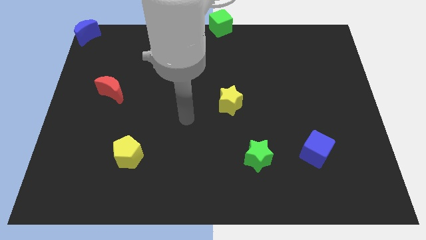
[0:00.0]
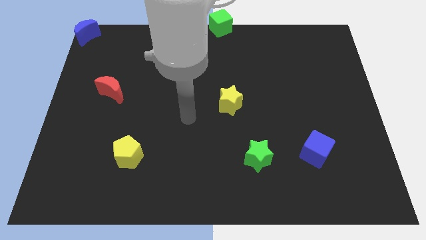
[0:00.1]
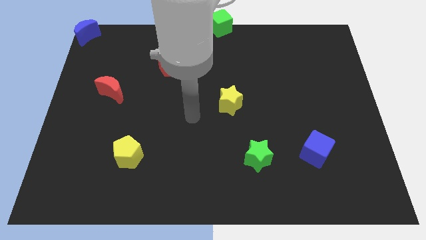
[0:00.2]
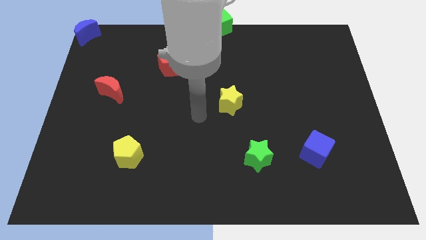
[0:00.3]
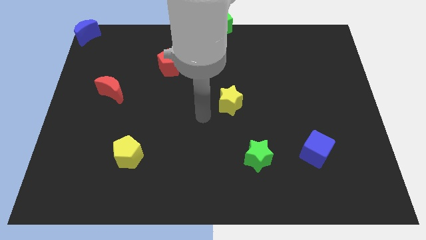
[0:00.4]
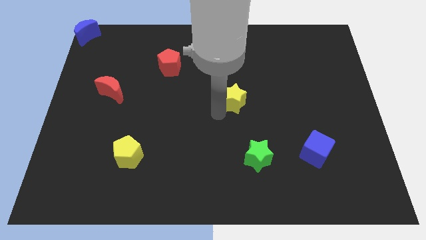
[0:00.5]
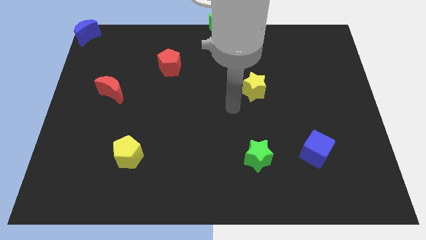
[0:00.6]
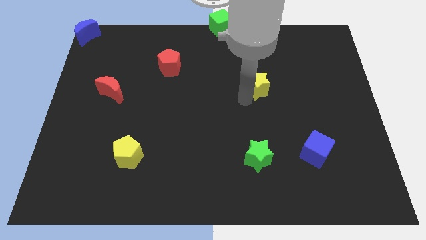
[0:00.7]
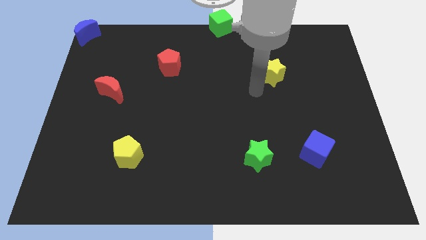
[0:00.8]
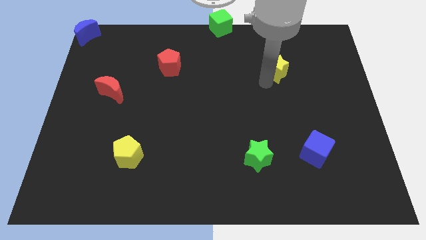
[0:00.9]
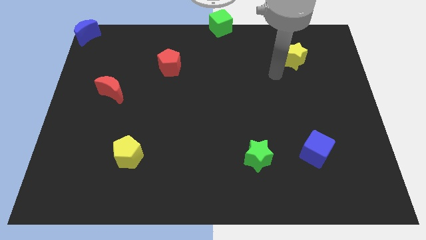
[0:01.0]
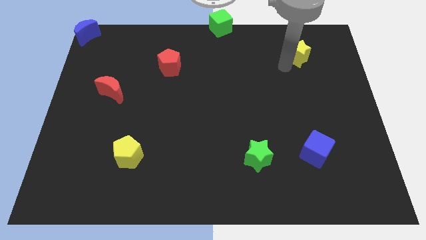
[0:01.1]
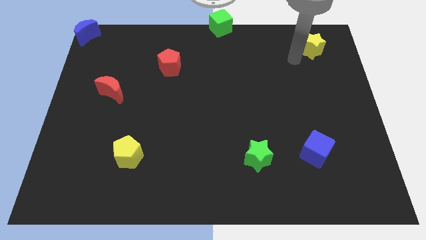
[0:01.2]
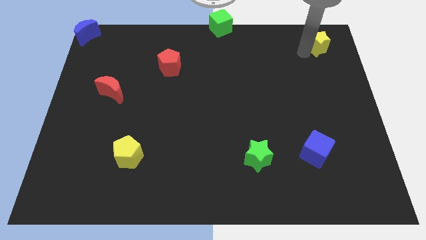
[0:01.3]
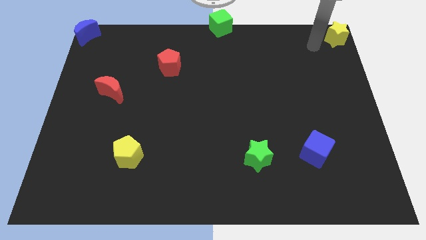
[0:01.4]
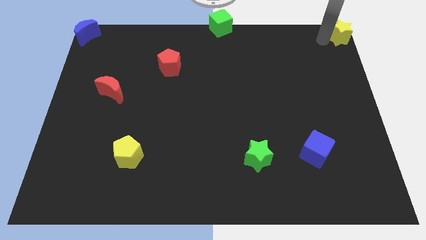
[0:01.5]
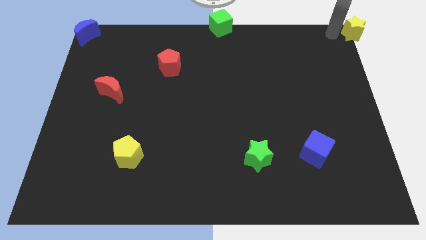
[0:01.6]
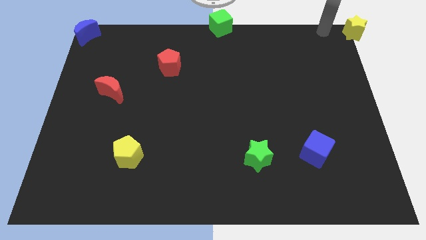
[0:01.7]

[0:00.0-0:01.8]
move the yellow star to the top right side of the table

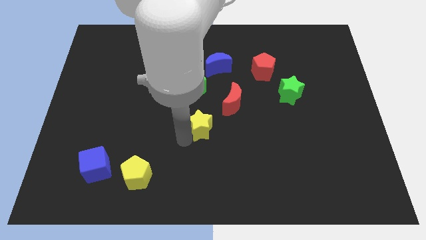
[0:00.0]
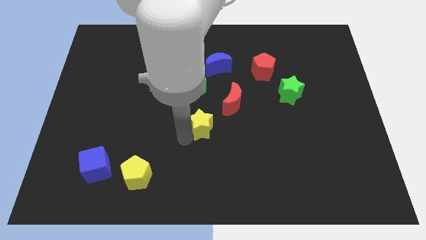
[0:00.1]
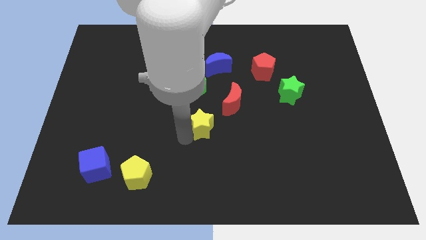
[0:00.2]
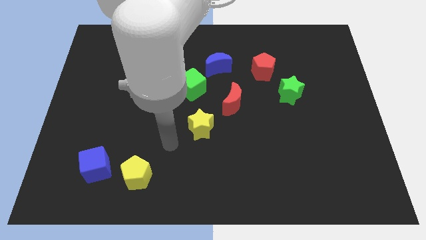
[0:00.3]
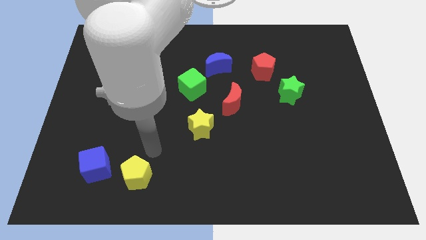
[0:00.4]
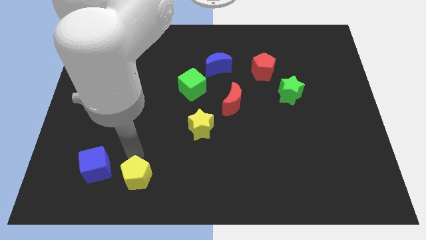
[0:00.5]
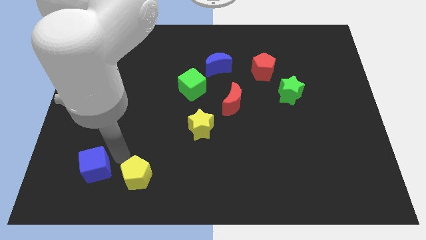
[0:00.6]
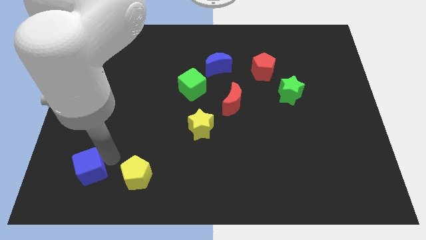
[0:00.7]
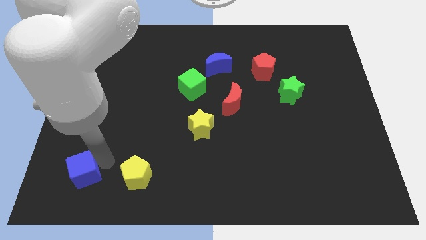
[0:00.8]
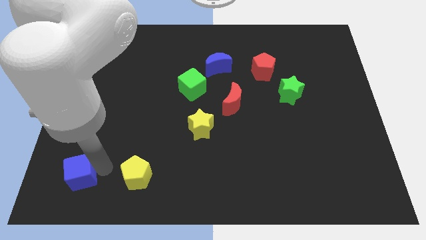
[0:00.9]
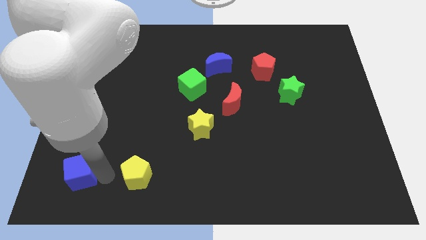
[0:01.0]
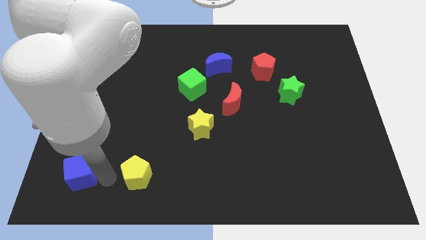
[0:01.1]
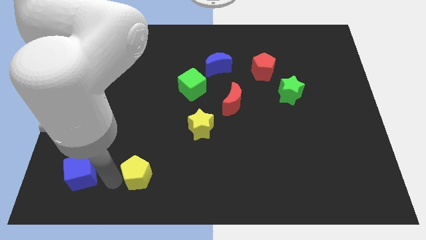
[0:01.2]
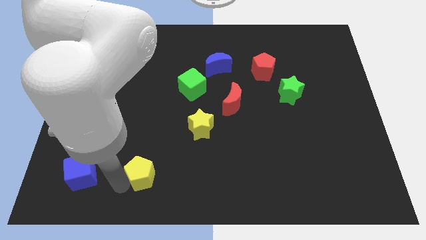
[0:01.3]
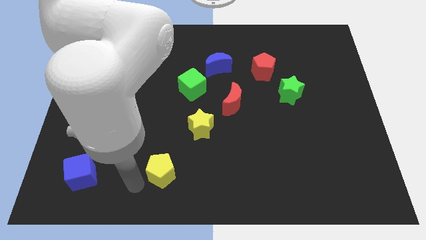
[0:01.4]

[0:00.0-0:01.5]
move the blue cube to the left side of the board

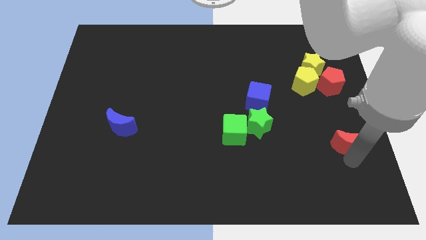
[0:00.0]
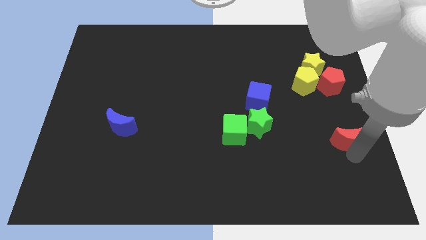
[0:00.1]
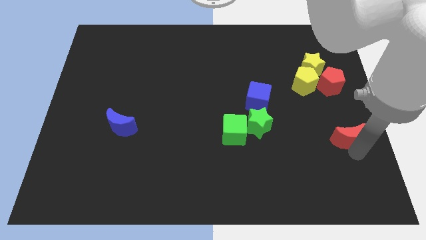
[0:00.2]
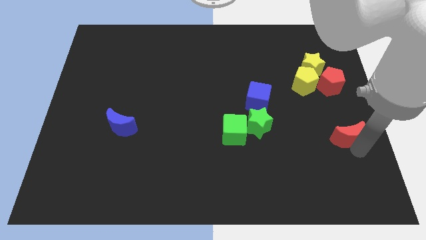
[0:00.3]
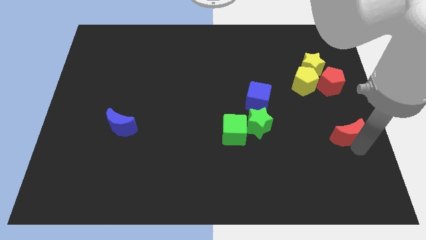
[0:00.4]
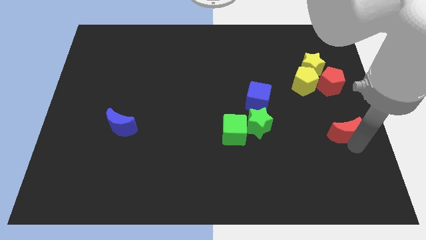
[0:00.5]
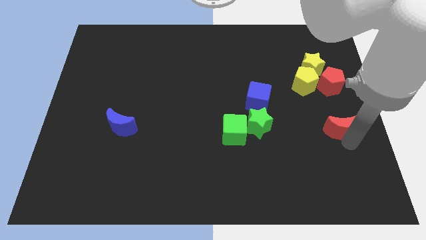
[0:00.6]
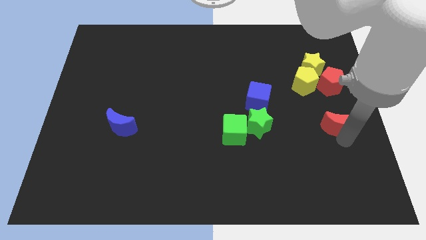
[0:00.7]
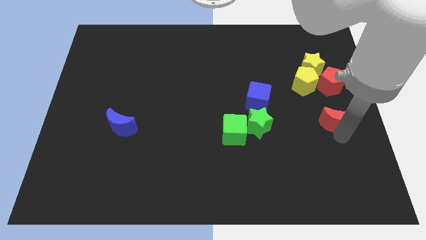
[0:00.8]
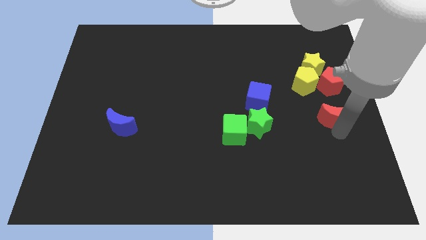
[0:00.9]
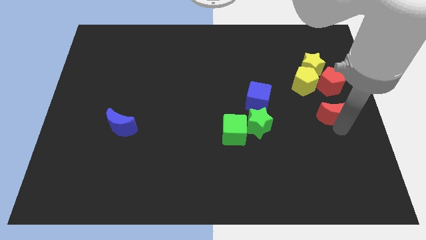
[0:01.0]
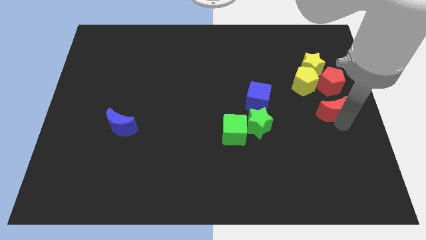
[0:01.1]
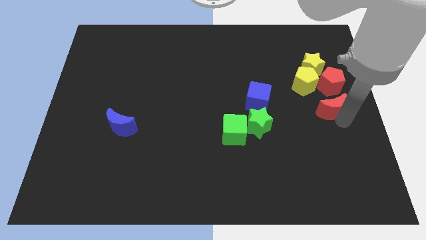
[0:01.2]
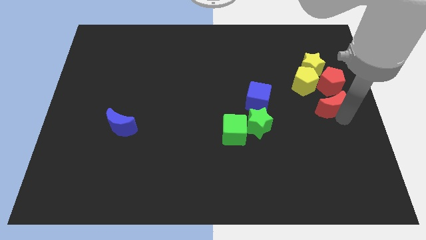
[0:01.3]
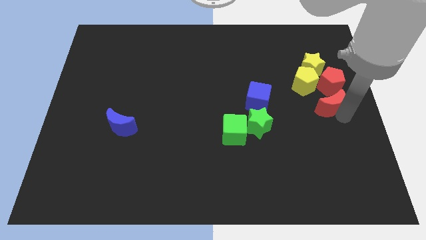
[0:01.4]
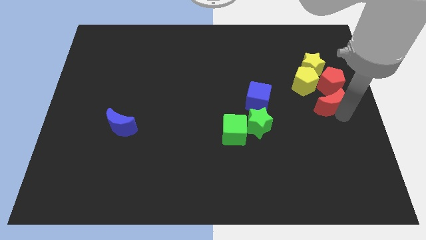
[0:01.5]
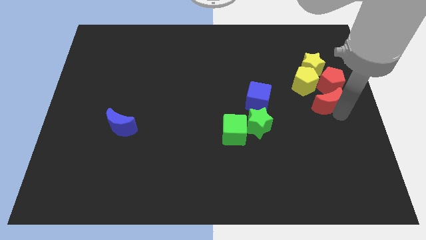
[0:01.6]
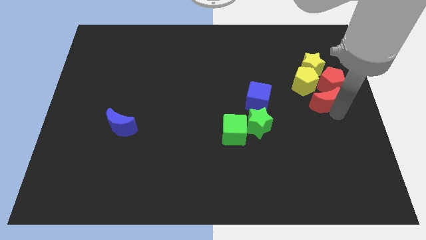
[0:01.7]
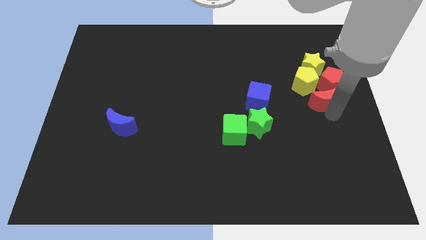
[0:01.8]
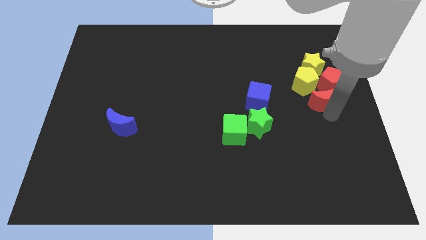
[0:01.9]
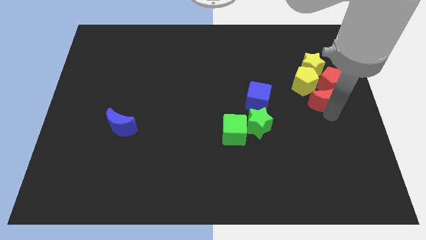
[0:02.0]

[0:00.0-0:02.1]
place the red moon near red and yellow pentagons

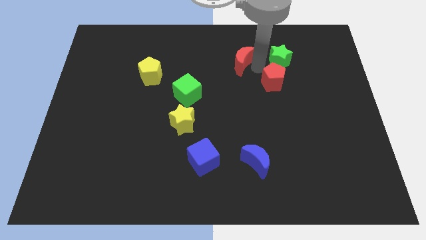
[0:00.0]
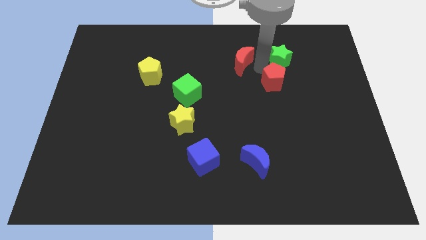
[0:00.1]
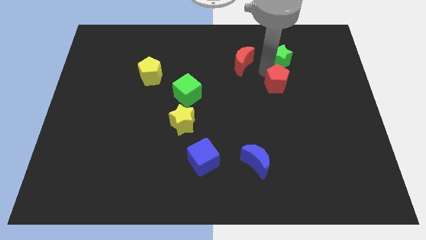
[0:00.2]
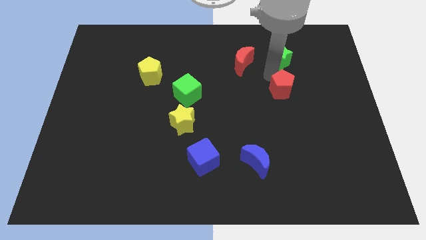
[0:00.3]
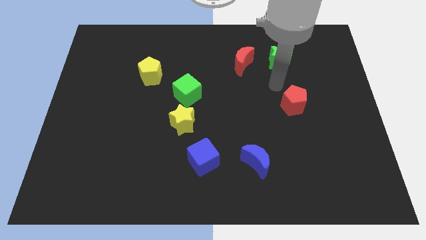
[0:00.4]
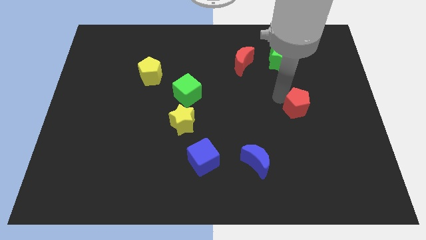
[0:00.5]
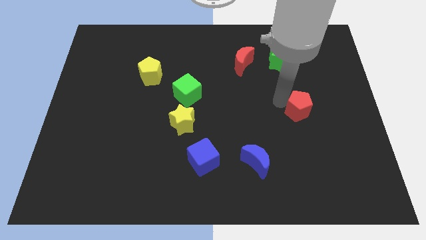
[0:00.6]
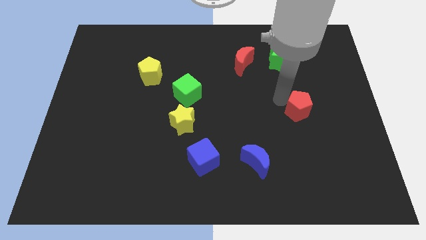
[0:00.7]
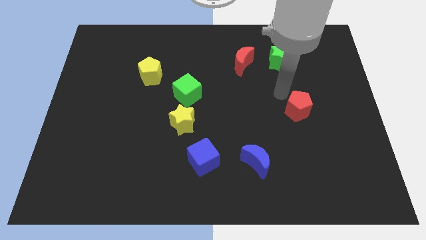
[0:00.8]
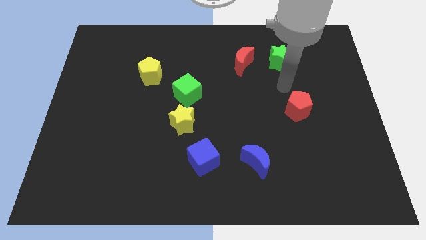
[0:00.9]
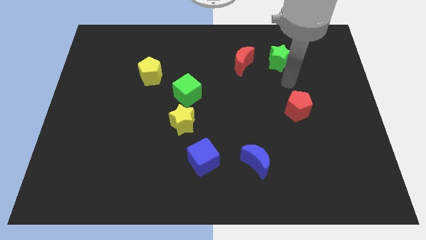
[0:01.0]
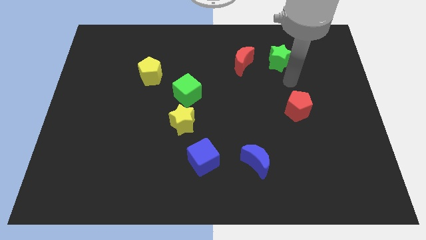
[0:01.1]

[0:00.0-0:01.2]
separate red pentagon from the green star

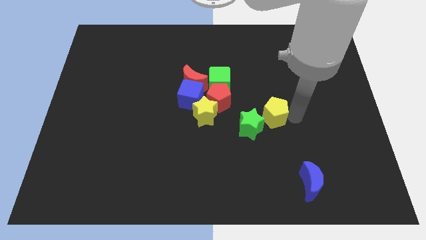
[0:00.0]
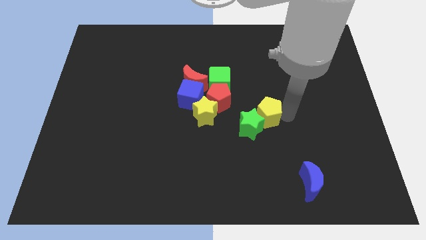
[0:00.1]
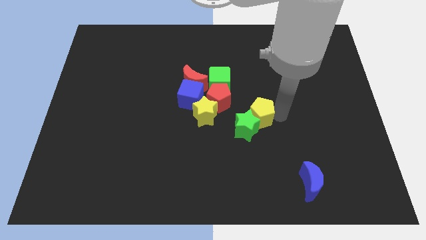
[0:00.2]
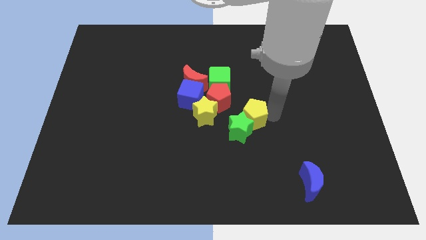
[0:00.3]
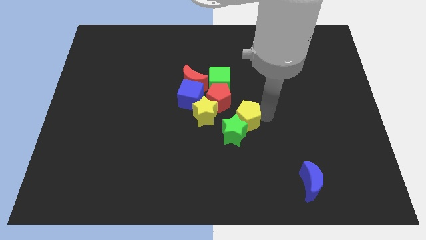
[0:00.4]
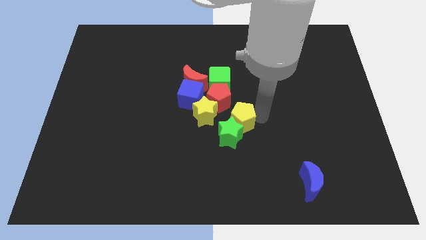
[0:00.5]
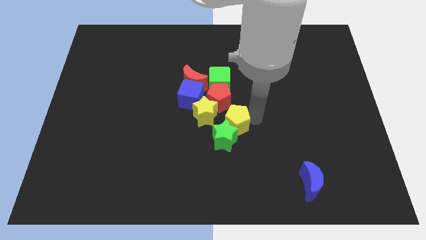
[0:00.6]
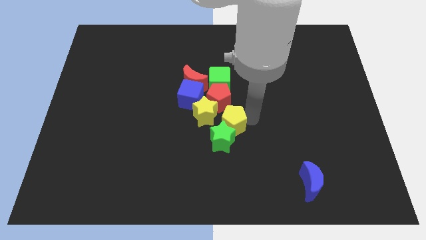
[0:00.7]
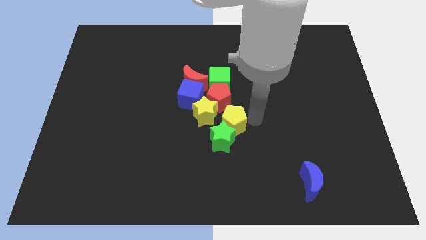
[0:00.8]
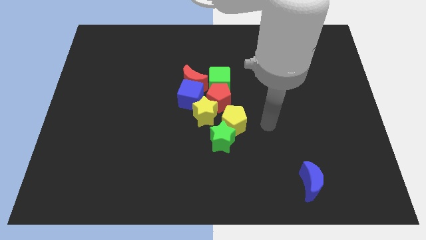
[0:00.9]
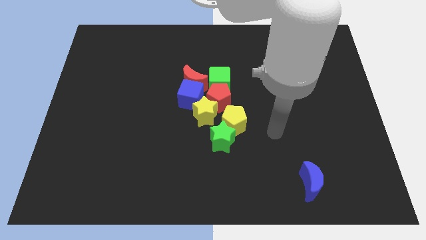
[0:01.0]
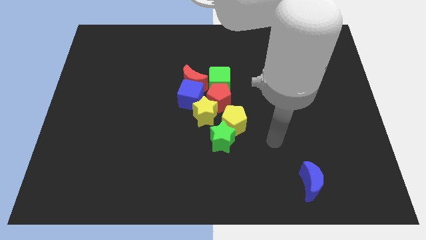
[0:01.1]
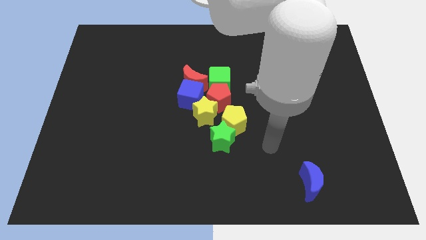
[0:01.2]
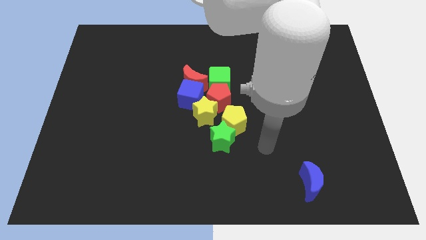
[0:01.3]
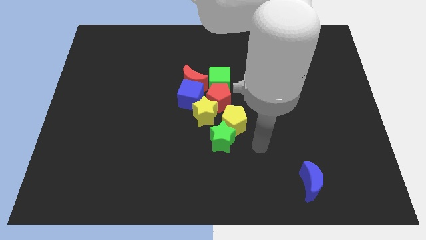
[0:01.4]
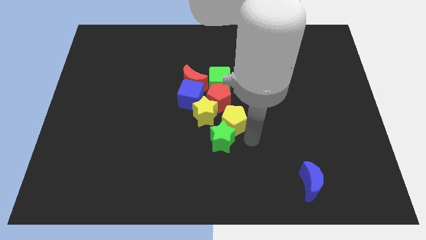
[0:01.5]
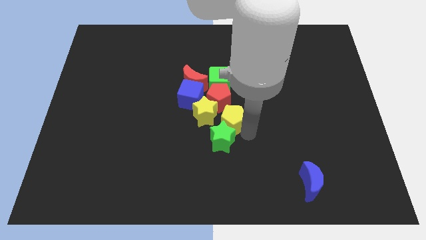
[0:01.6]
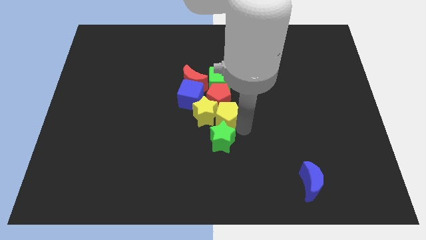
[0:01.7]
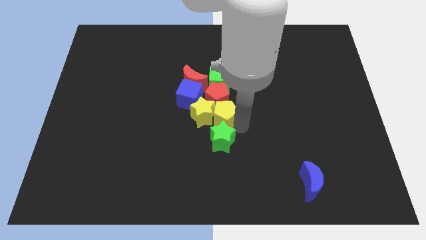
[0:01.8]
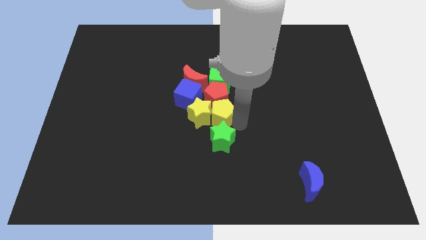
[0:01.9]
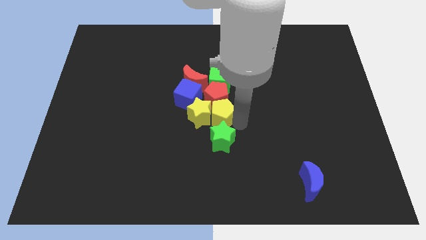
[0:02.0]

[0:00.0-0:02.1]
move the yellow pentagon to the bottom of the red pentagon

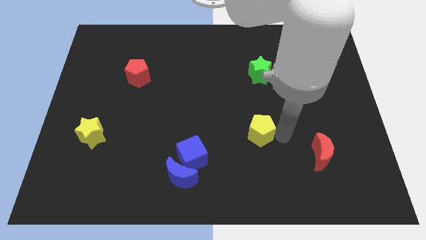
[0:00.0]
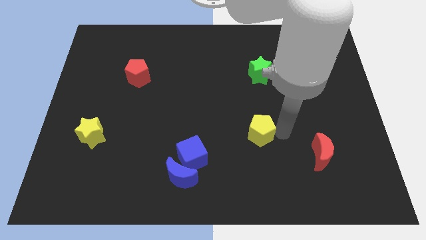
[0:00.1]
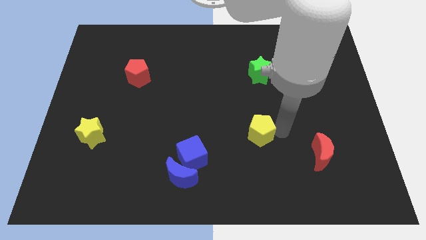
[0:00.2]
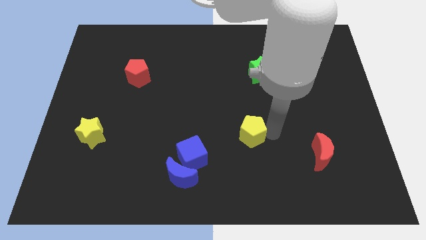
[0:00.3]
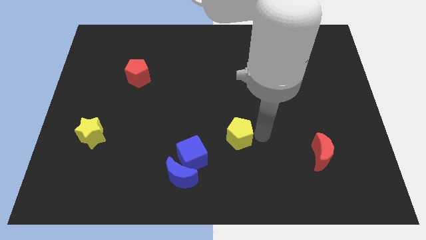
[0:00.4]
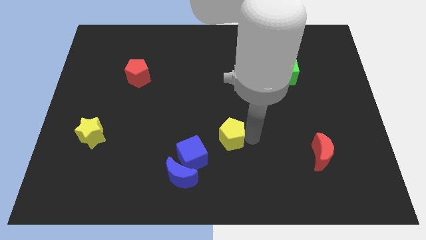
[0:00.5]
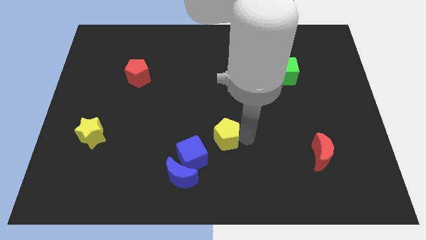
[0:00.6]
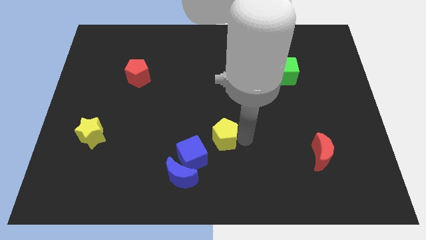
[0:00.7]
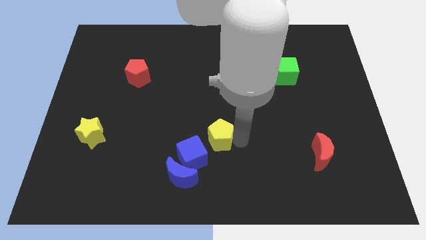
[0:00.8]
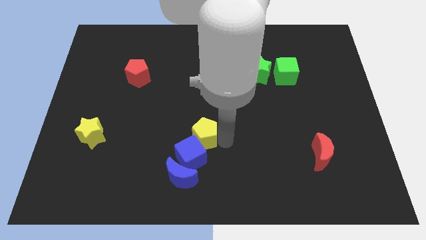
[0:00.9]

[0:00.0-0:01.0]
place yellow pentagon to the top right of blue cube
